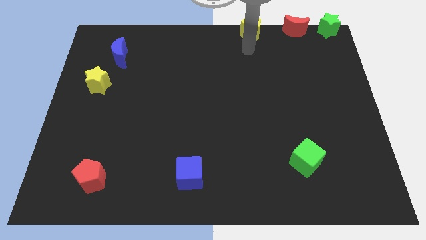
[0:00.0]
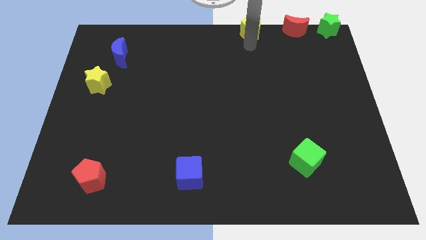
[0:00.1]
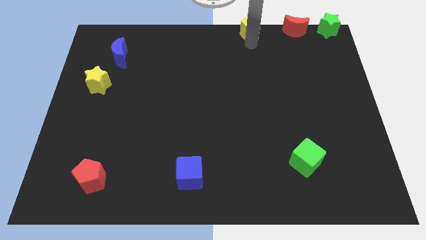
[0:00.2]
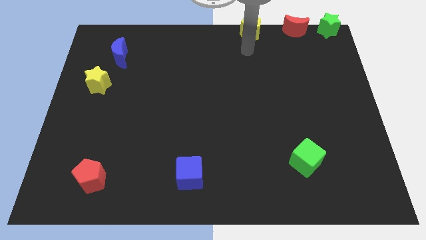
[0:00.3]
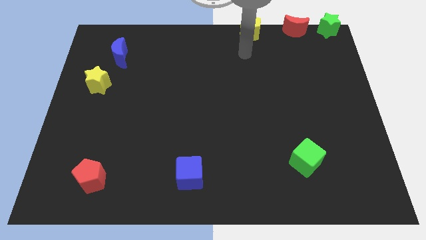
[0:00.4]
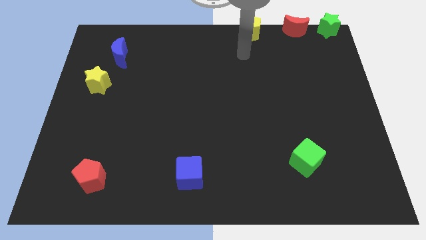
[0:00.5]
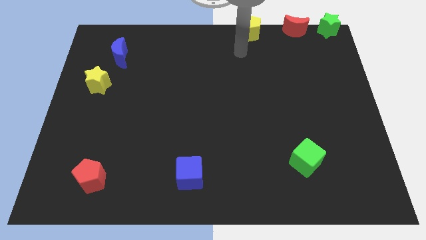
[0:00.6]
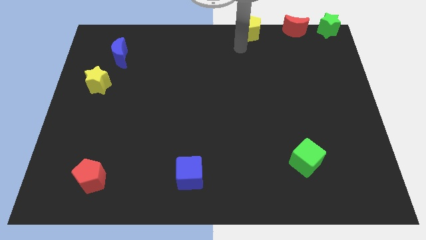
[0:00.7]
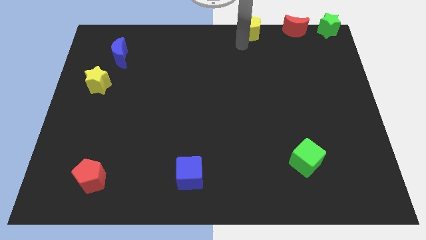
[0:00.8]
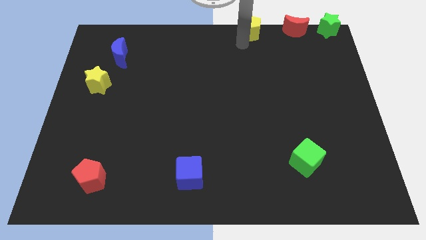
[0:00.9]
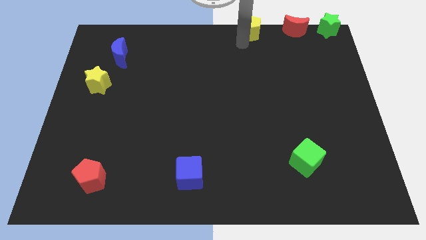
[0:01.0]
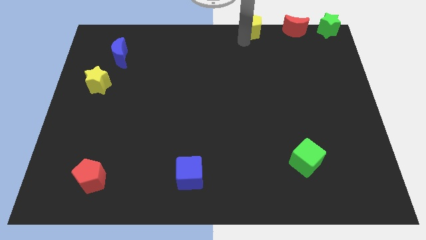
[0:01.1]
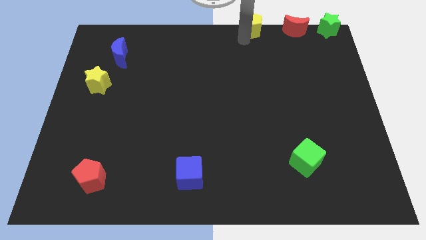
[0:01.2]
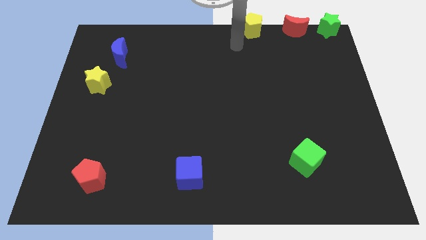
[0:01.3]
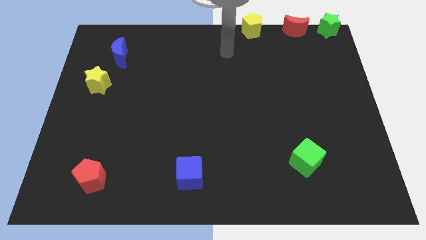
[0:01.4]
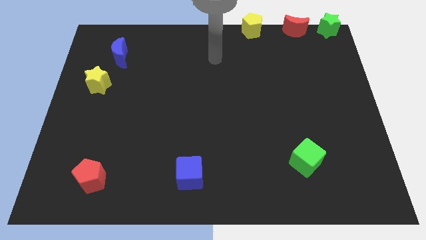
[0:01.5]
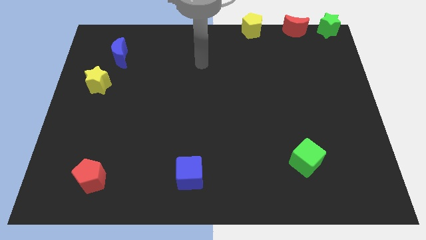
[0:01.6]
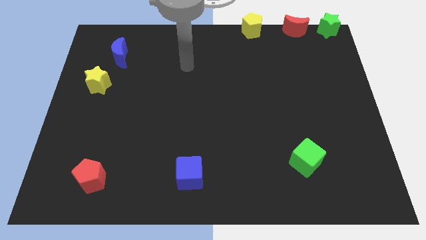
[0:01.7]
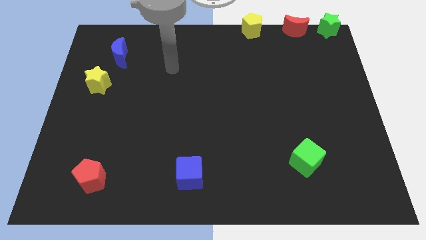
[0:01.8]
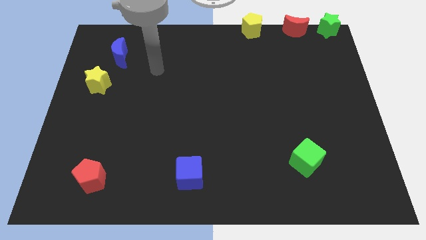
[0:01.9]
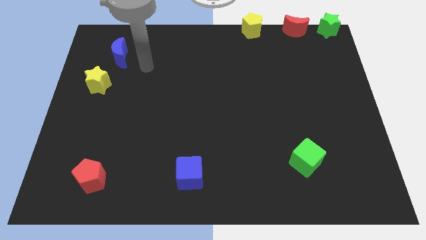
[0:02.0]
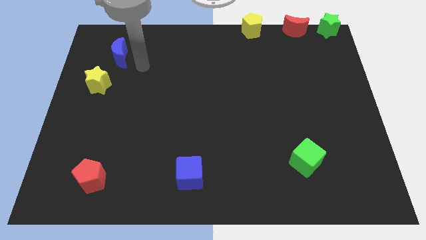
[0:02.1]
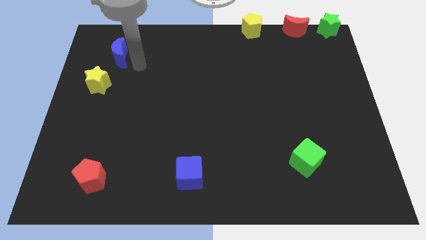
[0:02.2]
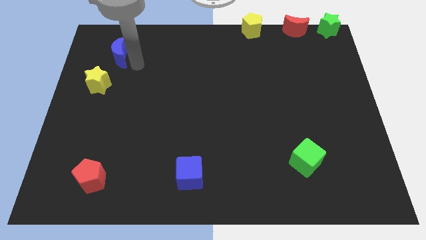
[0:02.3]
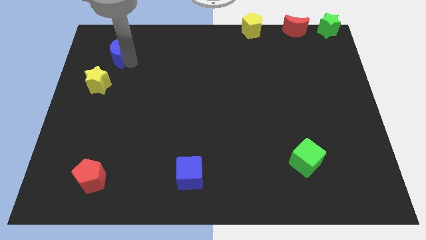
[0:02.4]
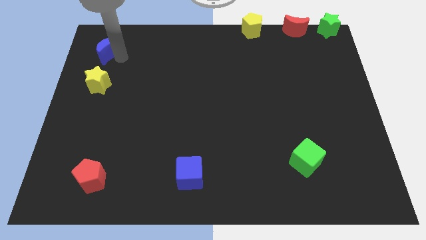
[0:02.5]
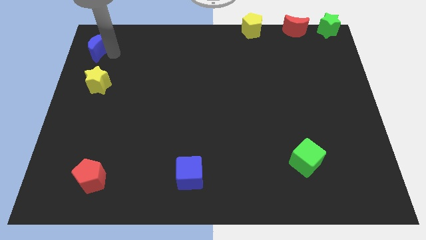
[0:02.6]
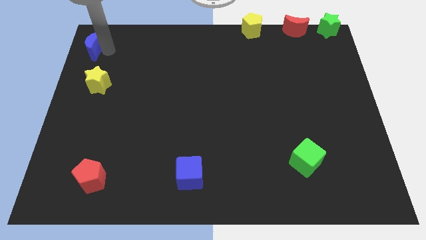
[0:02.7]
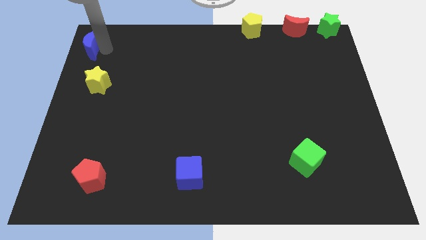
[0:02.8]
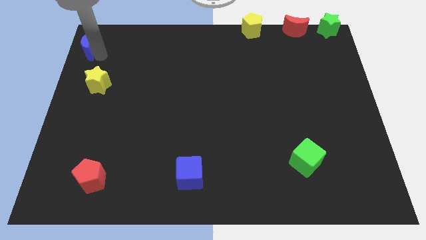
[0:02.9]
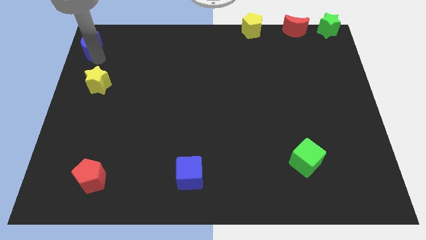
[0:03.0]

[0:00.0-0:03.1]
slightly push the blue moon to the top left corner

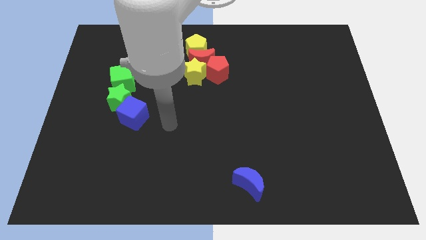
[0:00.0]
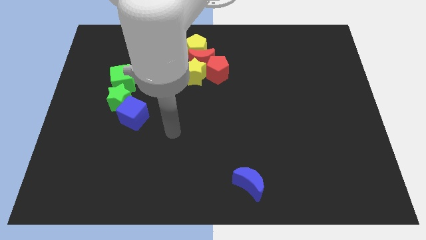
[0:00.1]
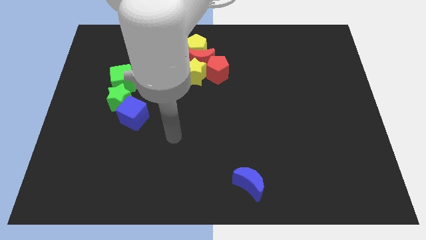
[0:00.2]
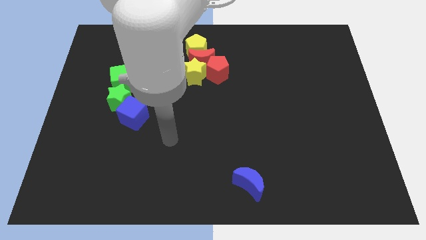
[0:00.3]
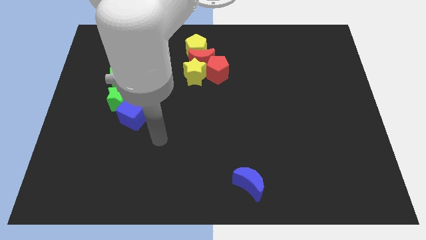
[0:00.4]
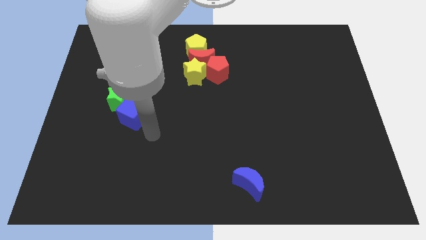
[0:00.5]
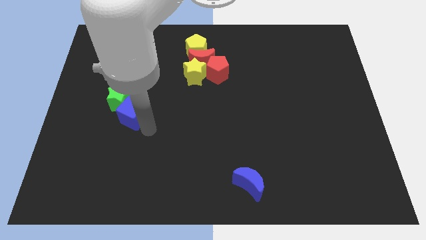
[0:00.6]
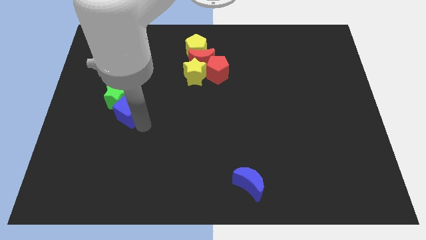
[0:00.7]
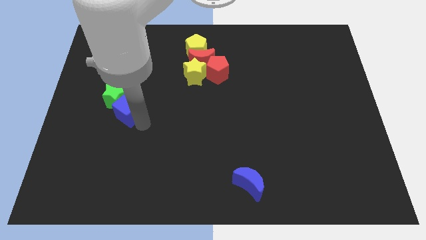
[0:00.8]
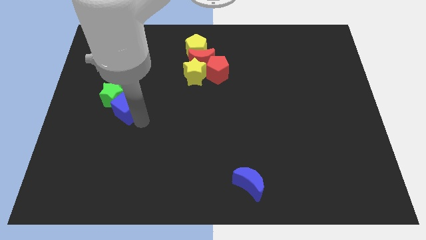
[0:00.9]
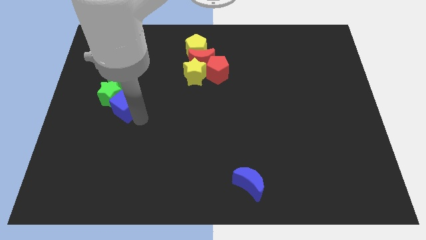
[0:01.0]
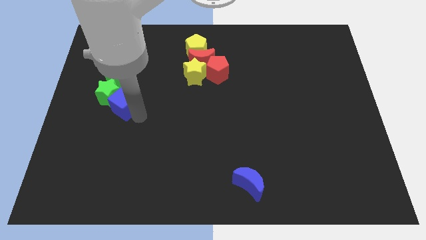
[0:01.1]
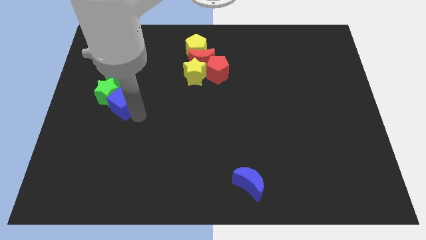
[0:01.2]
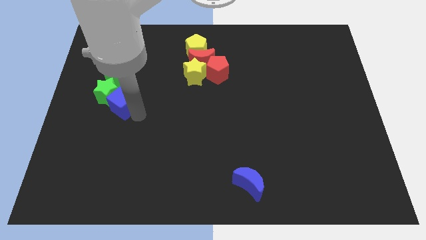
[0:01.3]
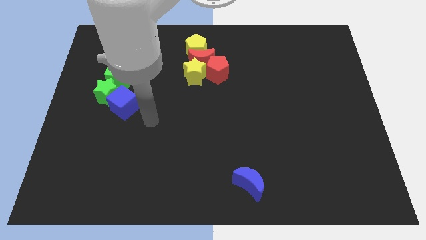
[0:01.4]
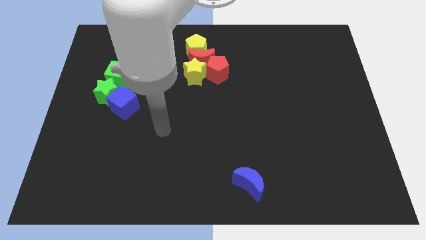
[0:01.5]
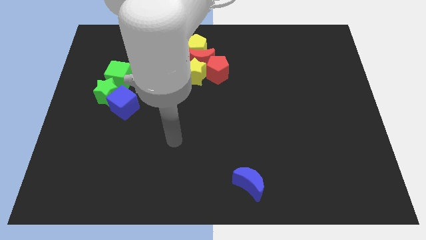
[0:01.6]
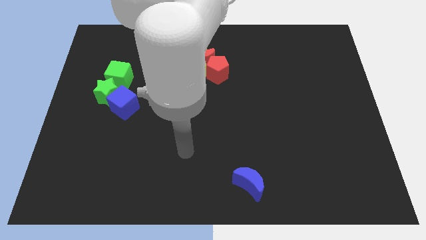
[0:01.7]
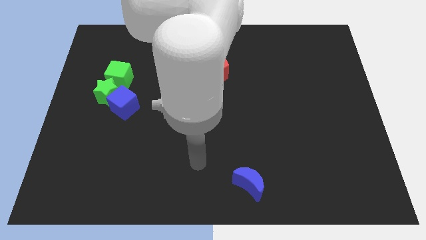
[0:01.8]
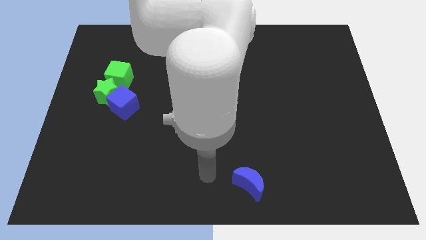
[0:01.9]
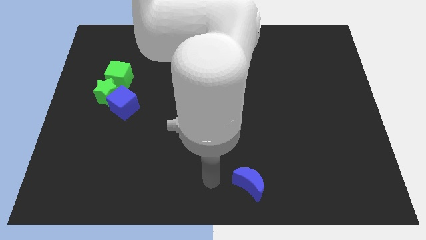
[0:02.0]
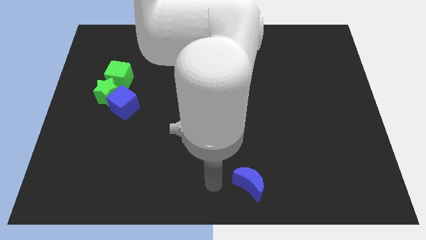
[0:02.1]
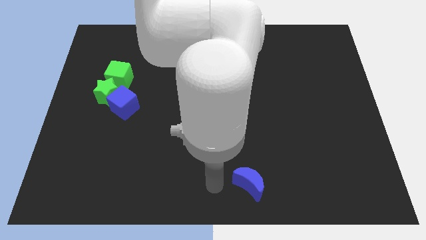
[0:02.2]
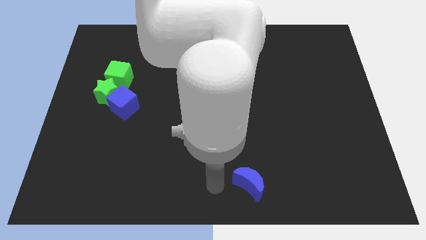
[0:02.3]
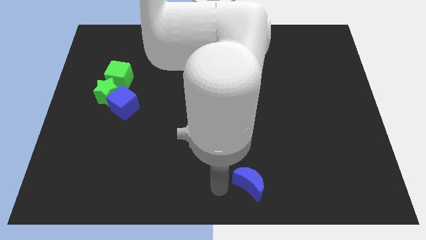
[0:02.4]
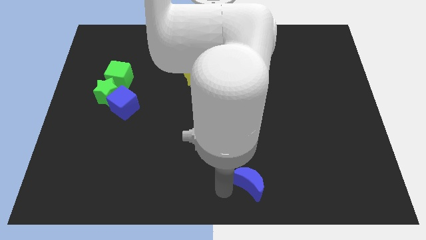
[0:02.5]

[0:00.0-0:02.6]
push the blue cube into the green blocks

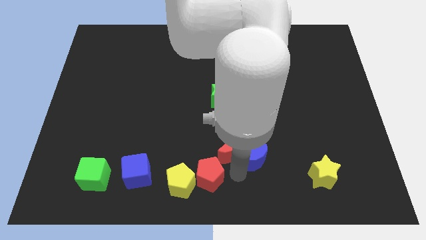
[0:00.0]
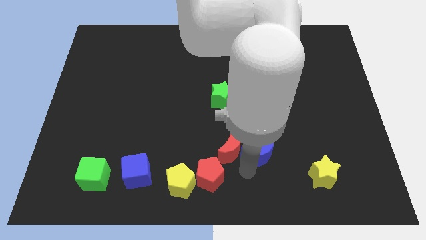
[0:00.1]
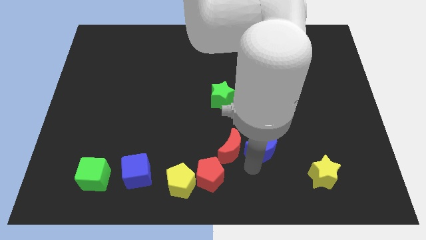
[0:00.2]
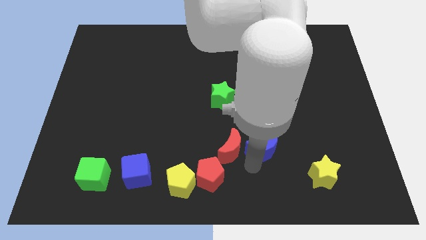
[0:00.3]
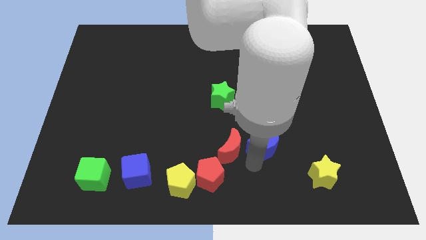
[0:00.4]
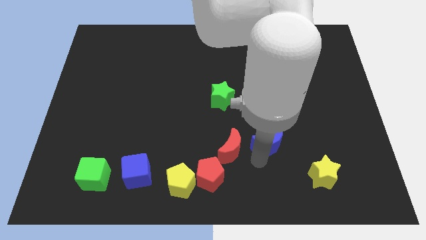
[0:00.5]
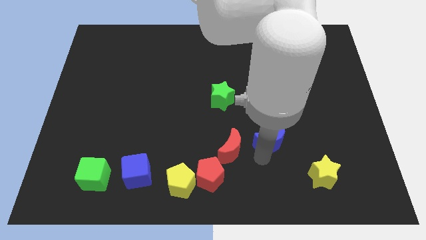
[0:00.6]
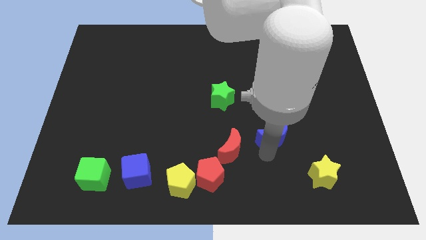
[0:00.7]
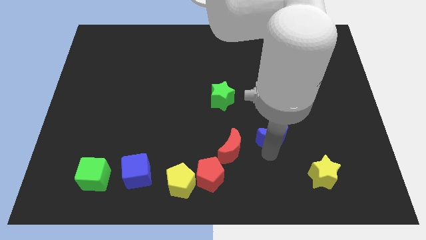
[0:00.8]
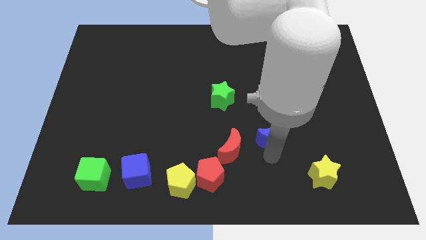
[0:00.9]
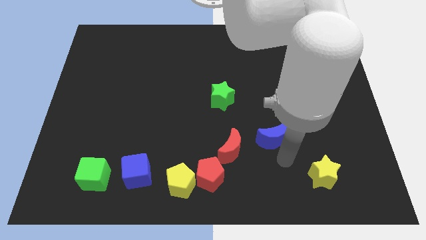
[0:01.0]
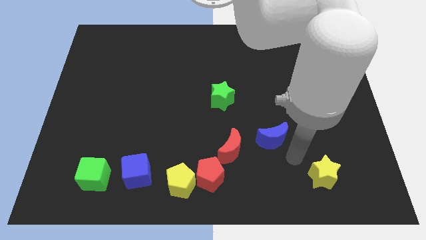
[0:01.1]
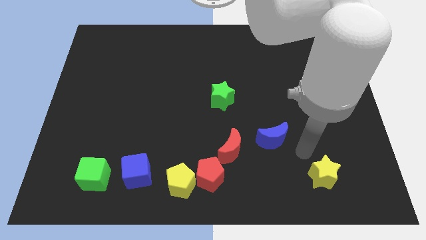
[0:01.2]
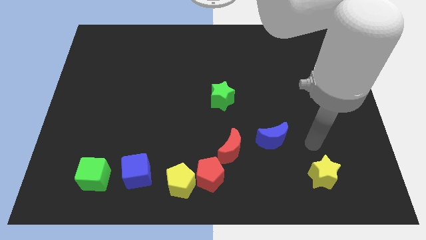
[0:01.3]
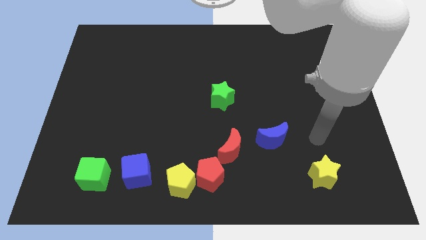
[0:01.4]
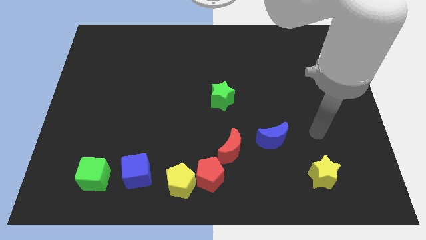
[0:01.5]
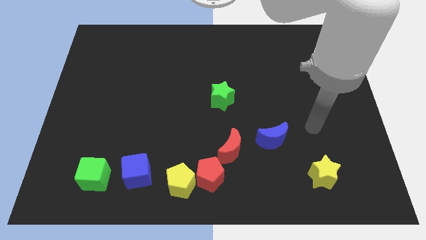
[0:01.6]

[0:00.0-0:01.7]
separate the blue crescent away from the red crescent

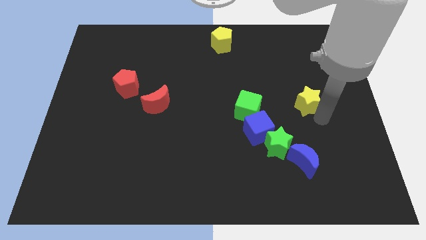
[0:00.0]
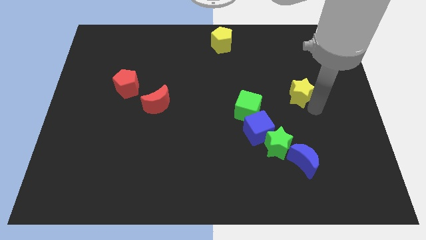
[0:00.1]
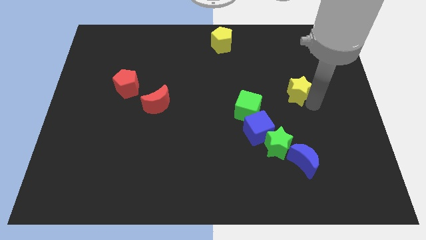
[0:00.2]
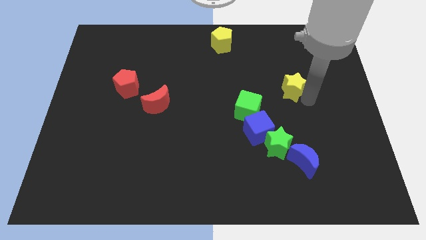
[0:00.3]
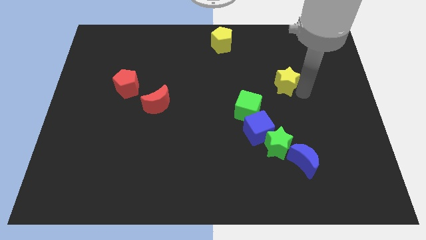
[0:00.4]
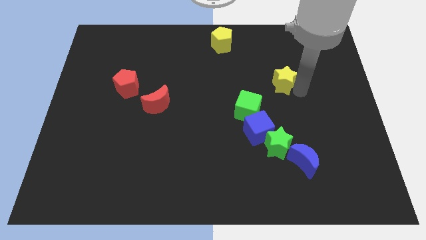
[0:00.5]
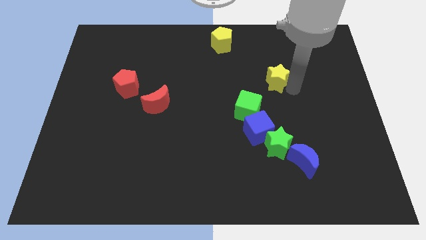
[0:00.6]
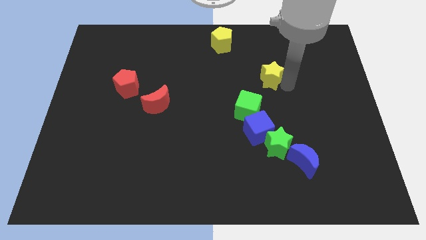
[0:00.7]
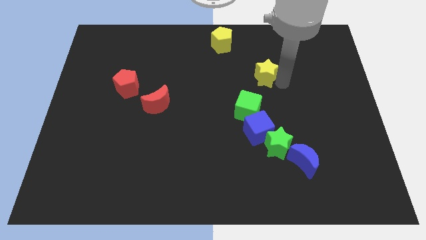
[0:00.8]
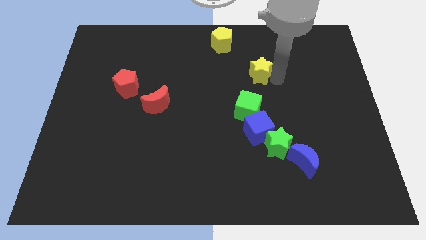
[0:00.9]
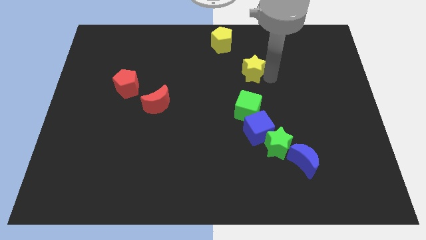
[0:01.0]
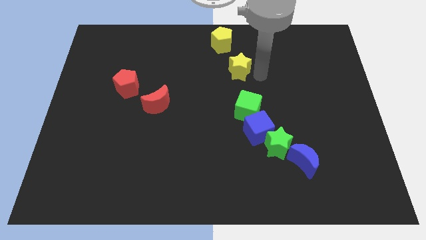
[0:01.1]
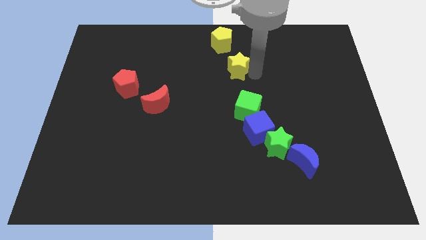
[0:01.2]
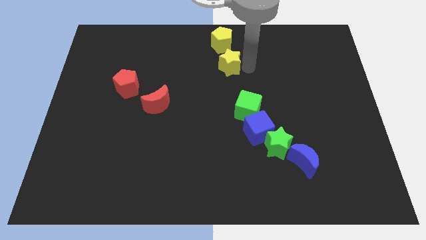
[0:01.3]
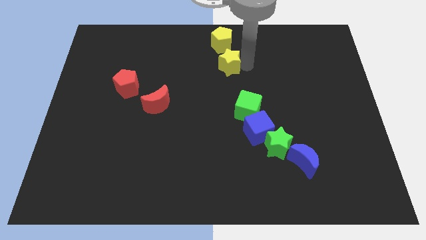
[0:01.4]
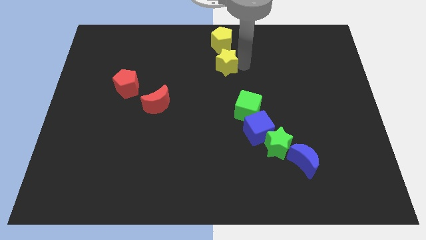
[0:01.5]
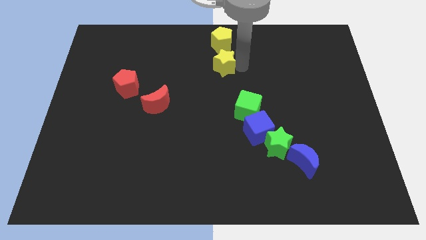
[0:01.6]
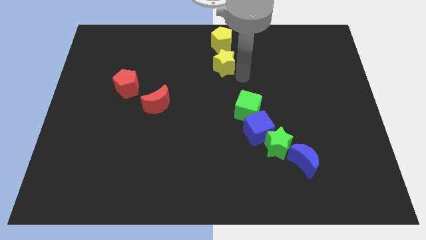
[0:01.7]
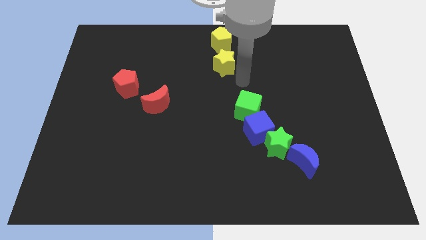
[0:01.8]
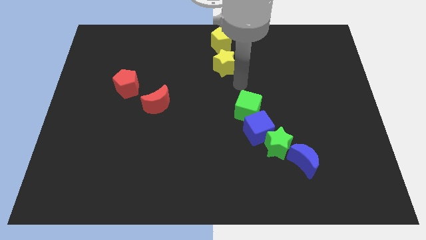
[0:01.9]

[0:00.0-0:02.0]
move the yellow star to the bottom of the yellow pentagon
